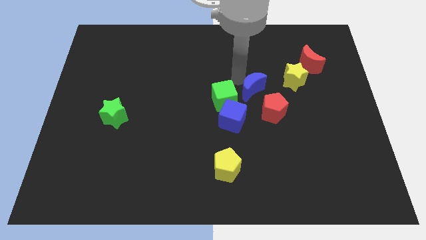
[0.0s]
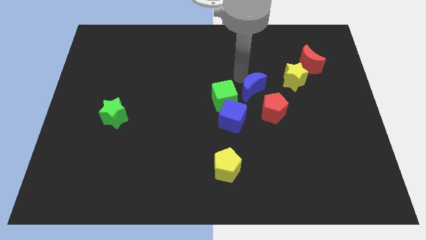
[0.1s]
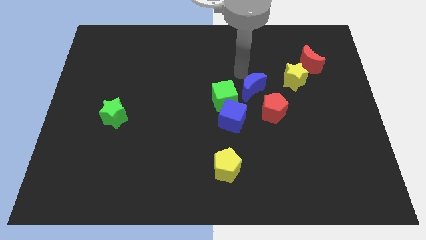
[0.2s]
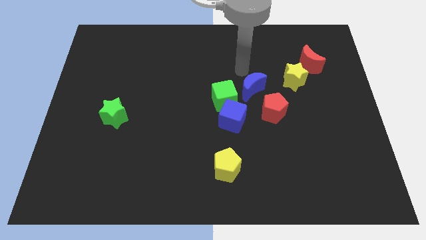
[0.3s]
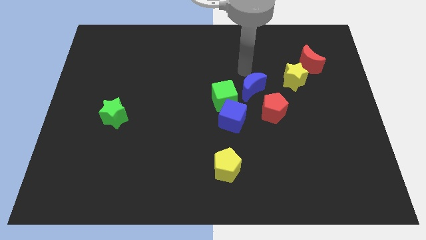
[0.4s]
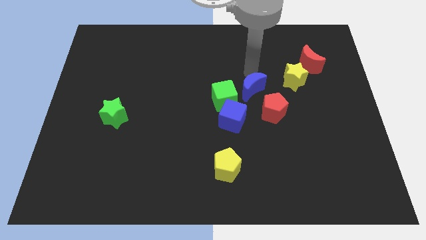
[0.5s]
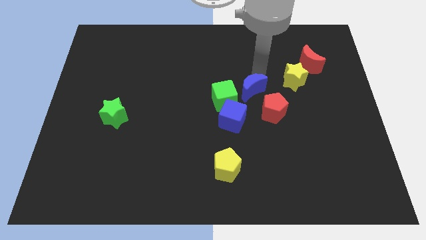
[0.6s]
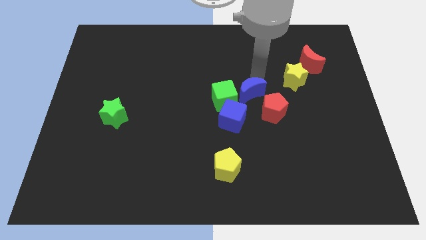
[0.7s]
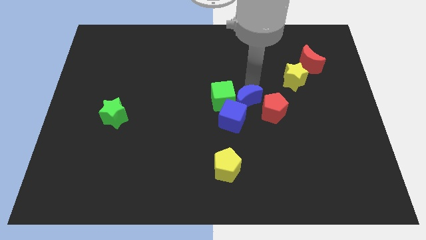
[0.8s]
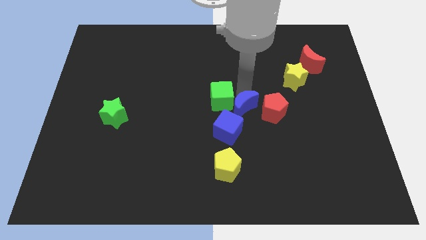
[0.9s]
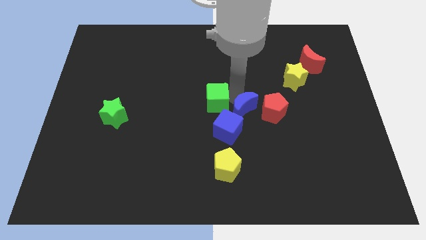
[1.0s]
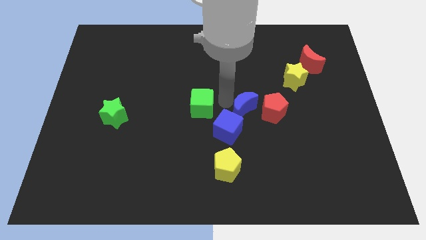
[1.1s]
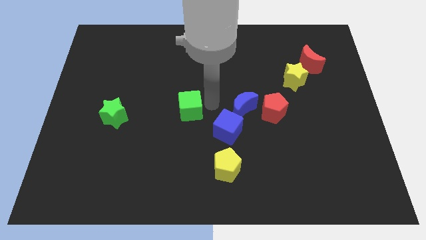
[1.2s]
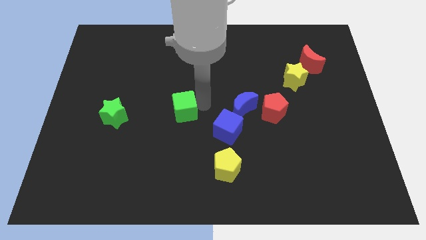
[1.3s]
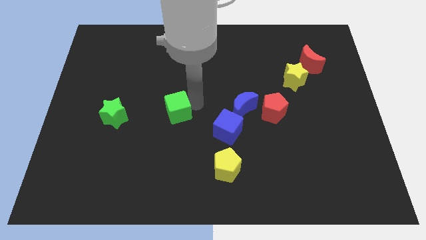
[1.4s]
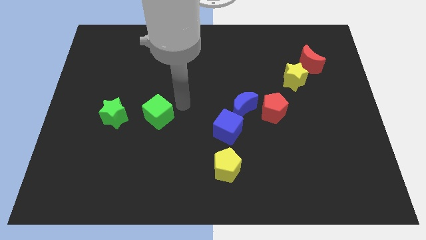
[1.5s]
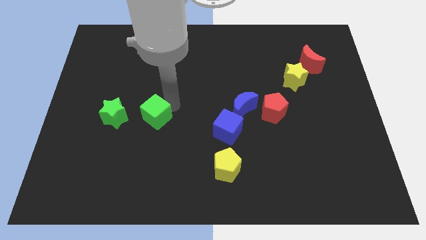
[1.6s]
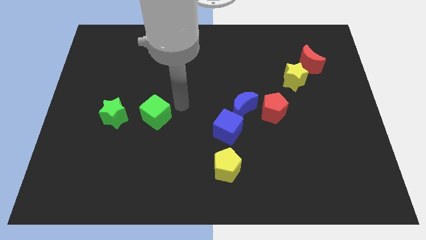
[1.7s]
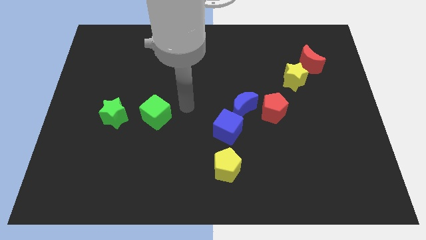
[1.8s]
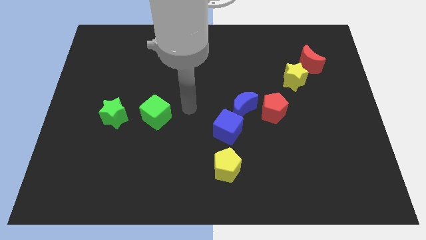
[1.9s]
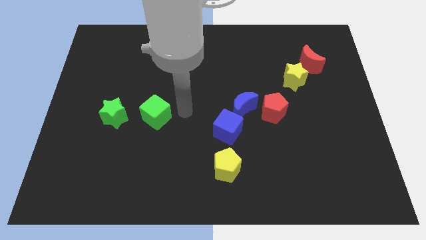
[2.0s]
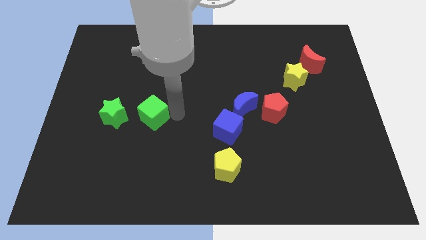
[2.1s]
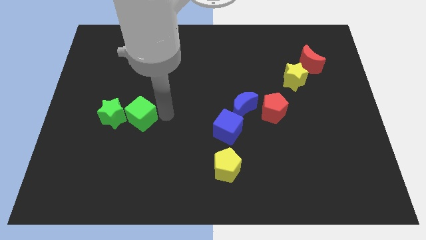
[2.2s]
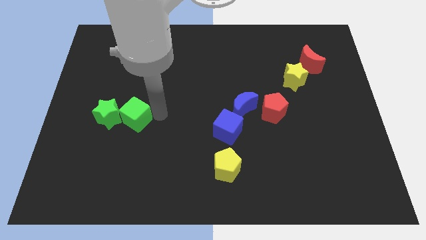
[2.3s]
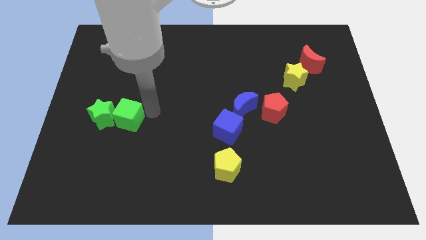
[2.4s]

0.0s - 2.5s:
move the green cube into the green star

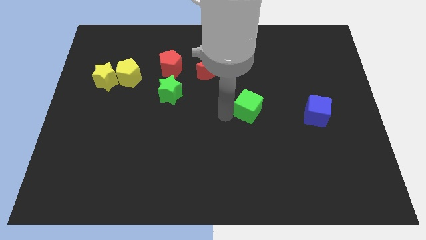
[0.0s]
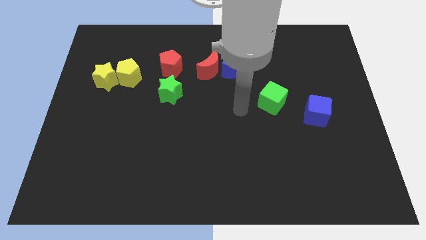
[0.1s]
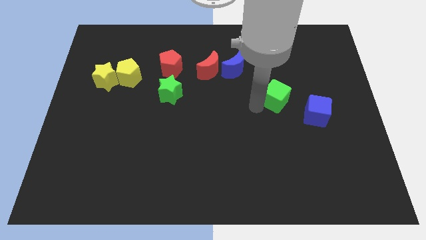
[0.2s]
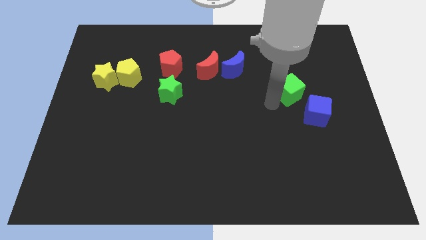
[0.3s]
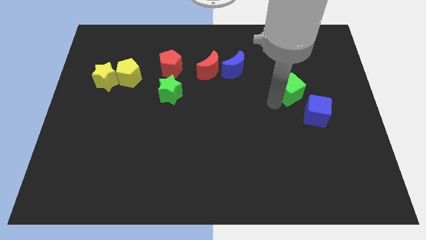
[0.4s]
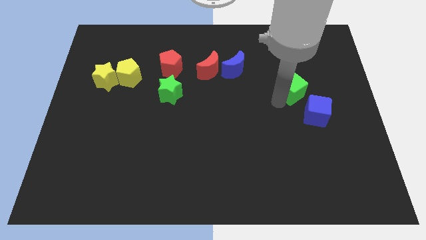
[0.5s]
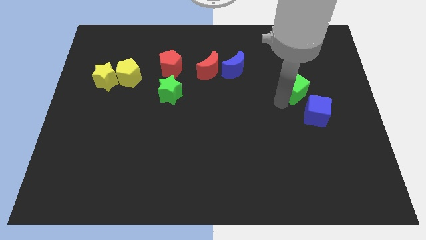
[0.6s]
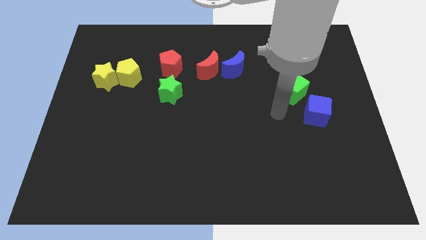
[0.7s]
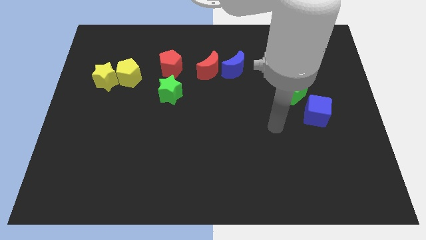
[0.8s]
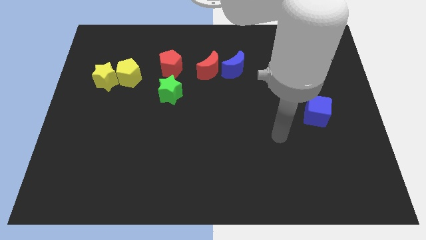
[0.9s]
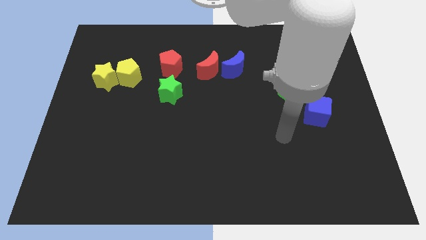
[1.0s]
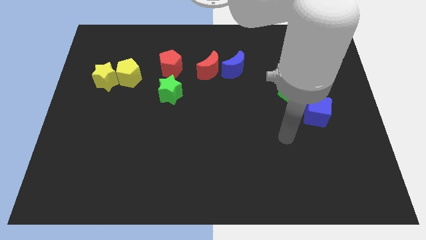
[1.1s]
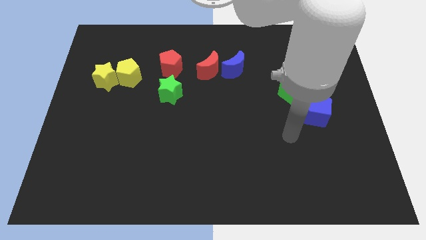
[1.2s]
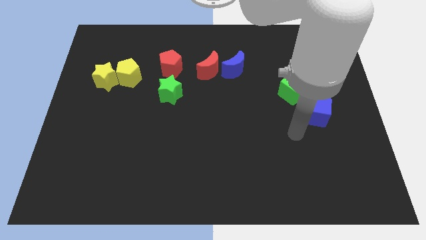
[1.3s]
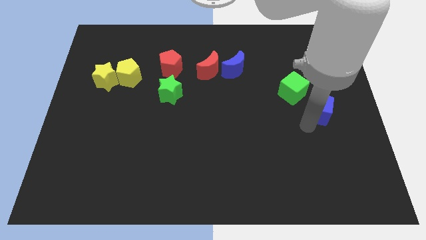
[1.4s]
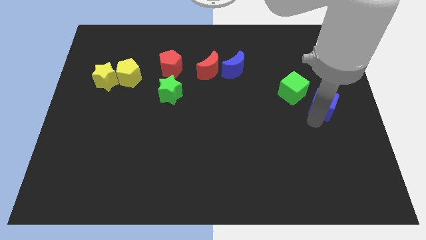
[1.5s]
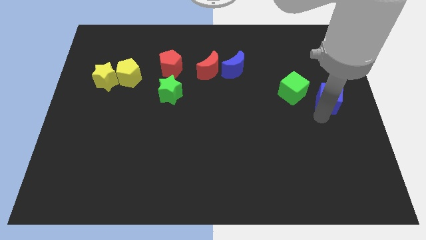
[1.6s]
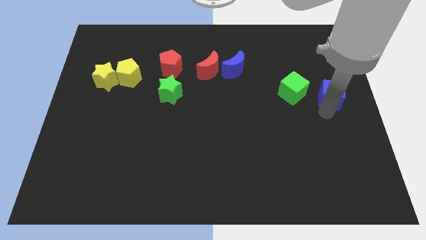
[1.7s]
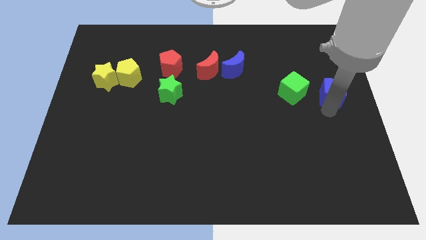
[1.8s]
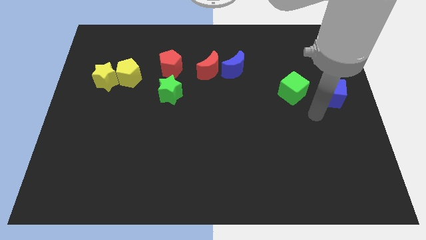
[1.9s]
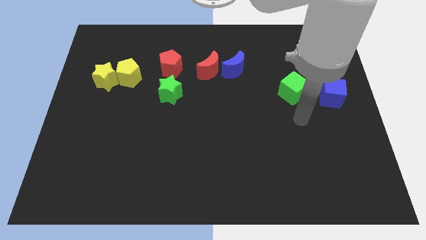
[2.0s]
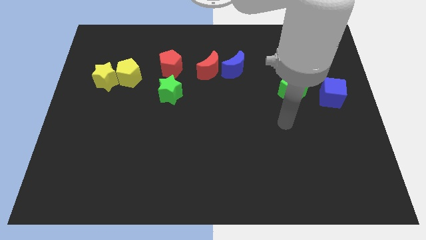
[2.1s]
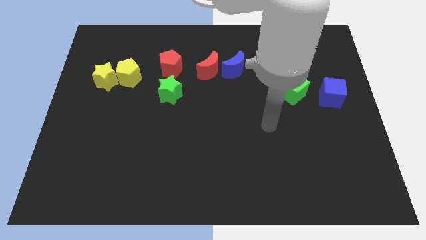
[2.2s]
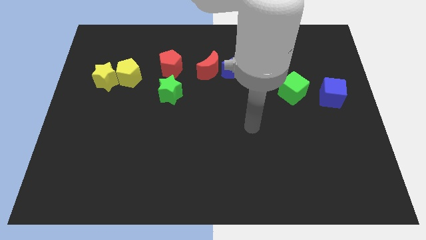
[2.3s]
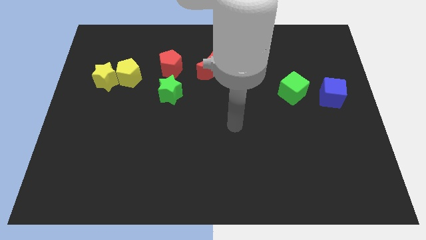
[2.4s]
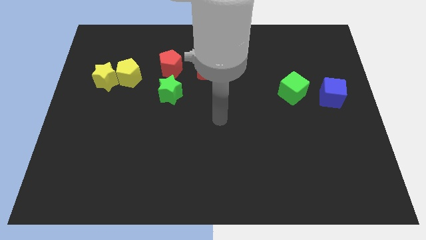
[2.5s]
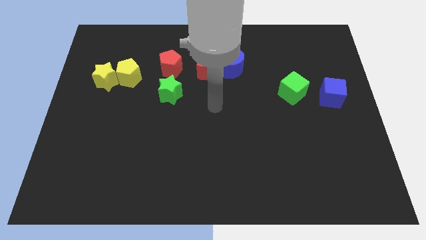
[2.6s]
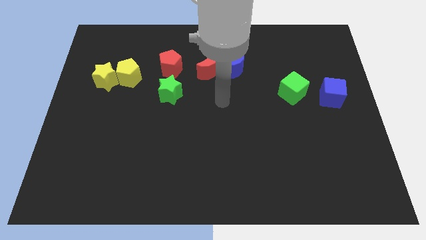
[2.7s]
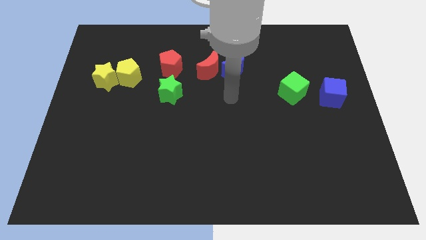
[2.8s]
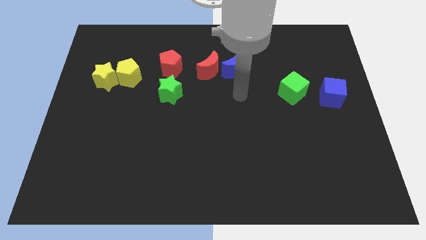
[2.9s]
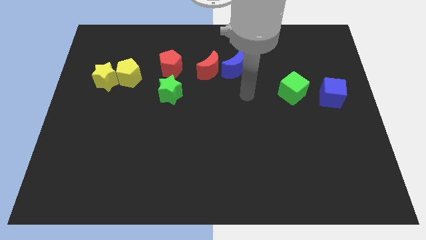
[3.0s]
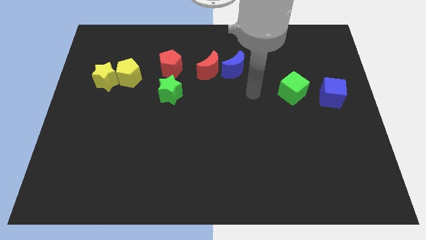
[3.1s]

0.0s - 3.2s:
push the green cube and blue cube towards the right side of the board

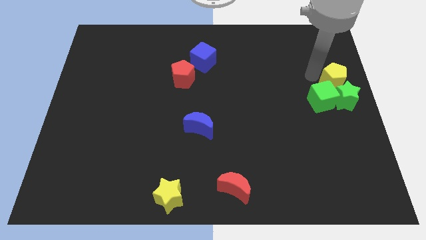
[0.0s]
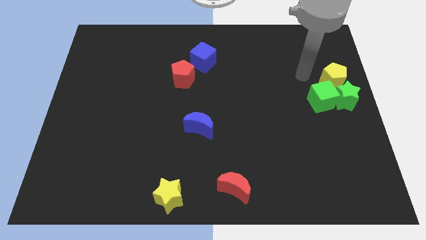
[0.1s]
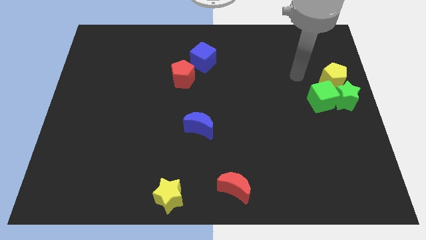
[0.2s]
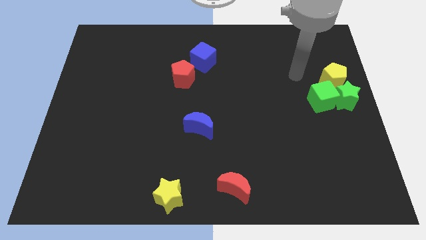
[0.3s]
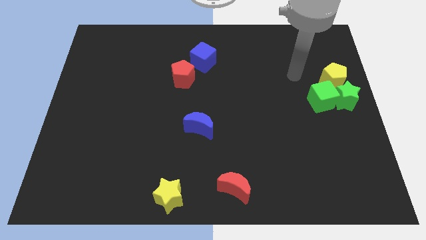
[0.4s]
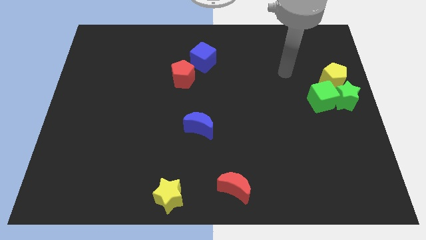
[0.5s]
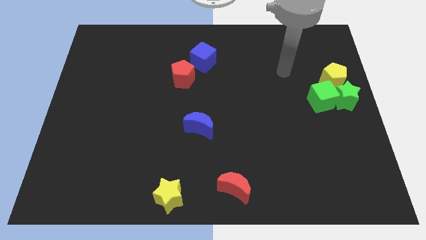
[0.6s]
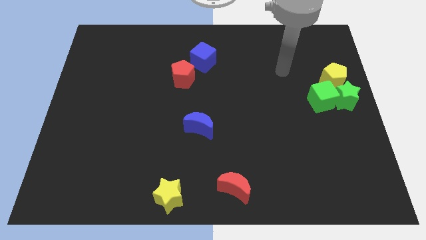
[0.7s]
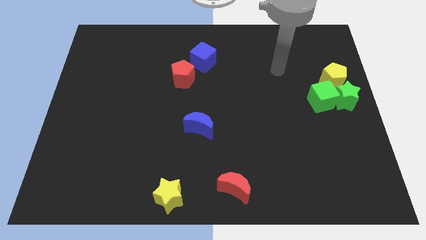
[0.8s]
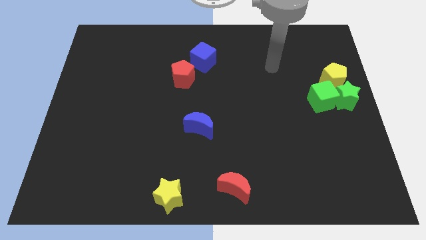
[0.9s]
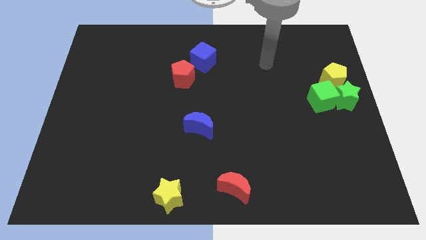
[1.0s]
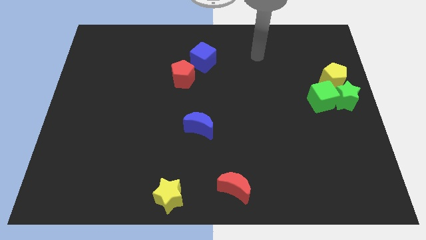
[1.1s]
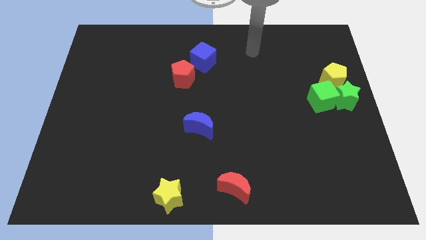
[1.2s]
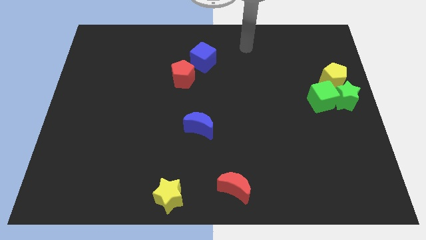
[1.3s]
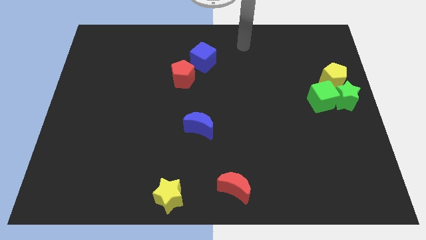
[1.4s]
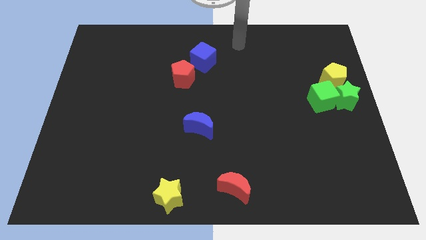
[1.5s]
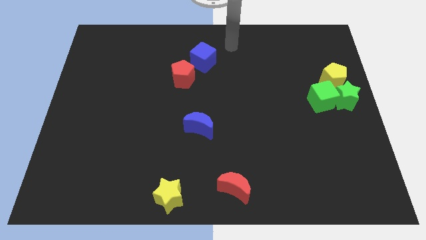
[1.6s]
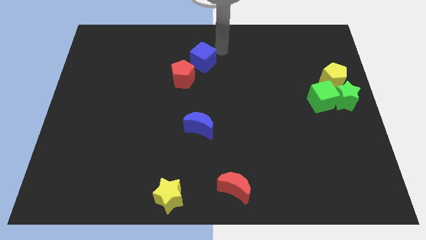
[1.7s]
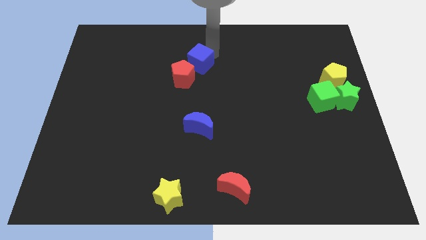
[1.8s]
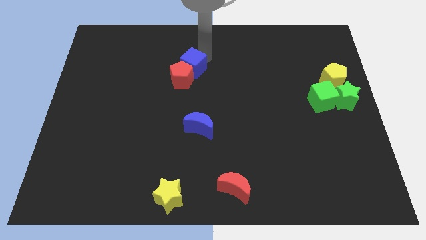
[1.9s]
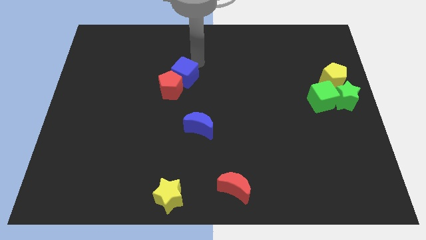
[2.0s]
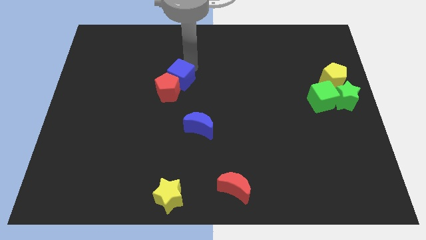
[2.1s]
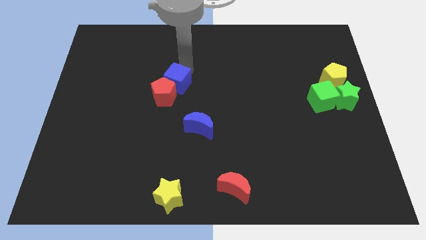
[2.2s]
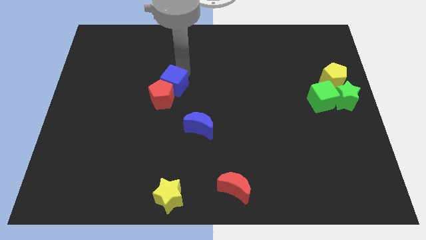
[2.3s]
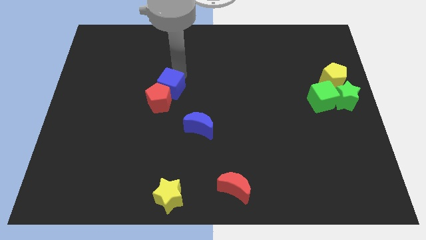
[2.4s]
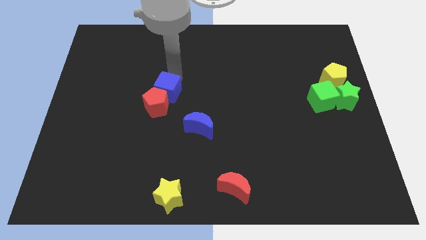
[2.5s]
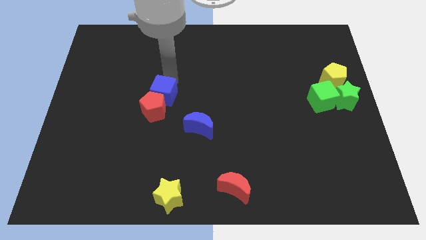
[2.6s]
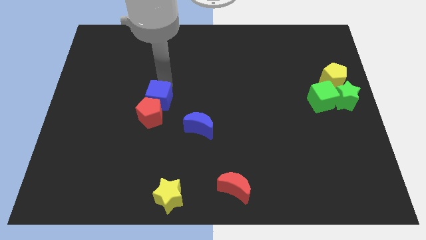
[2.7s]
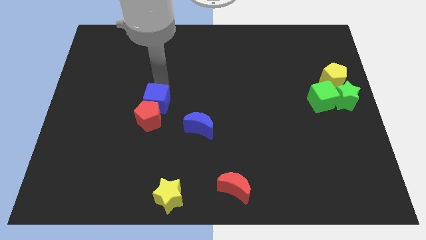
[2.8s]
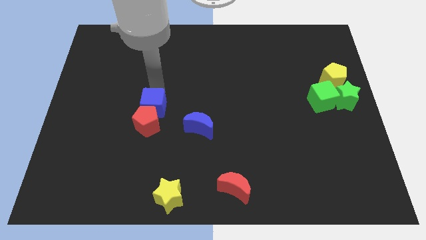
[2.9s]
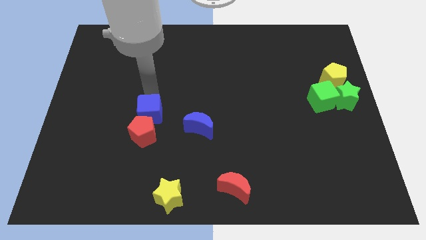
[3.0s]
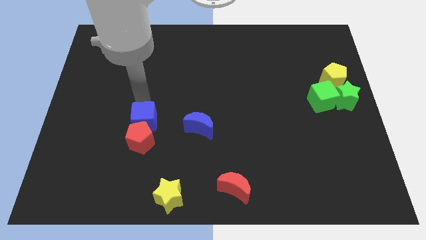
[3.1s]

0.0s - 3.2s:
move the blue cube parallel left to the blue moon
